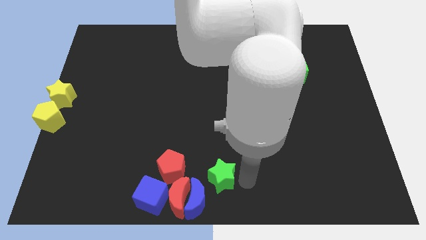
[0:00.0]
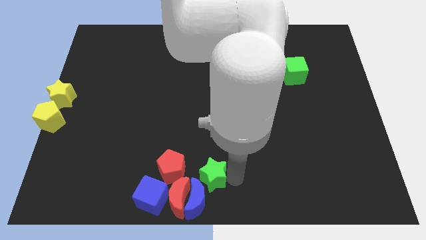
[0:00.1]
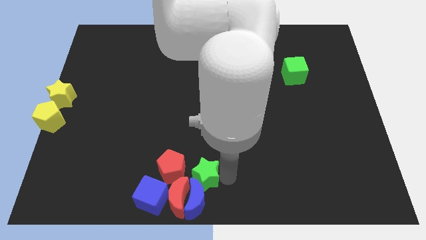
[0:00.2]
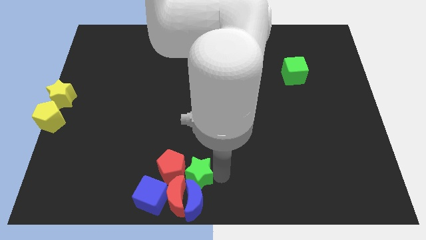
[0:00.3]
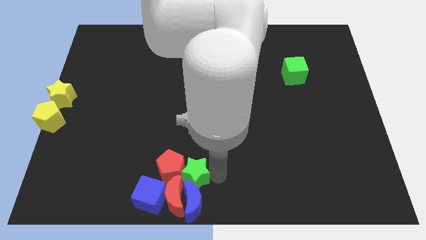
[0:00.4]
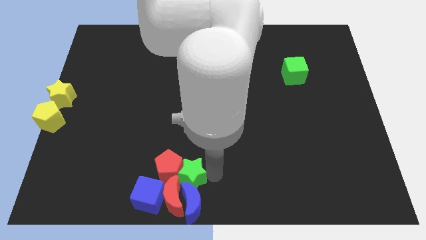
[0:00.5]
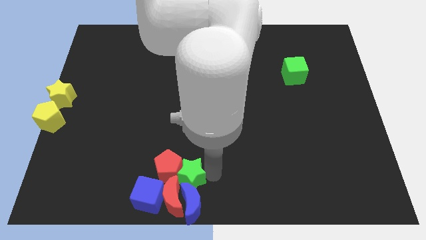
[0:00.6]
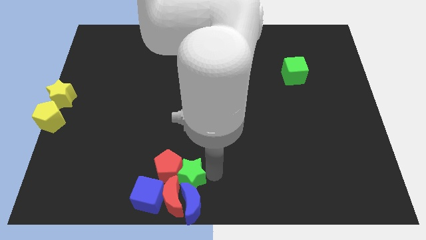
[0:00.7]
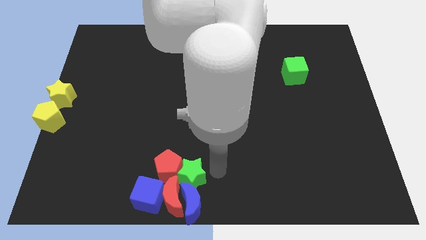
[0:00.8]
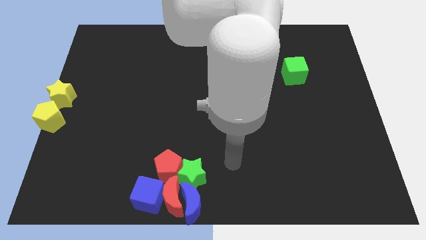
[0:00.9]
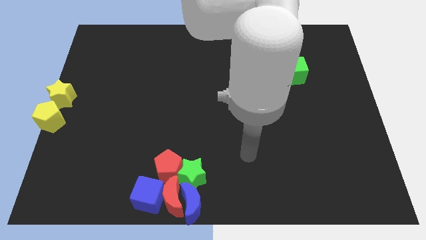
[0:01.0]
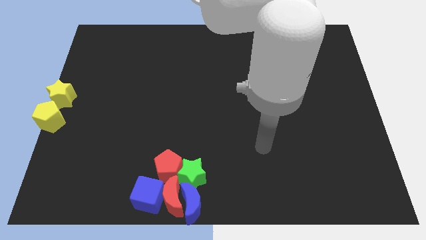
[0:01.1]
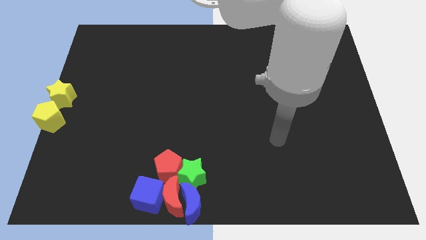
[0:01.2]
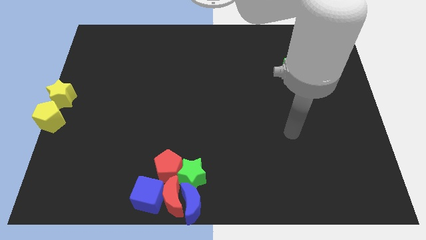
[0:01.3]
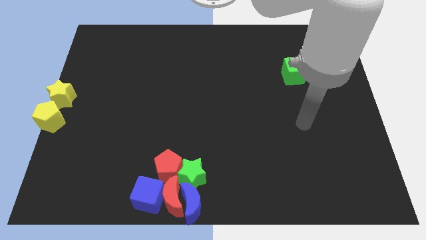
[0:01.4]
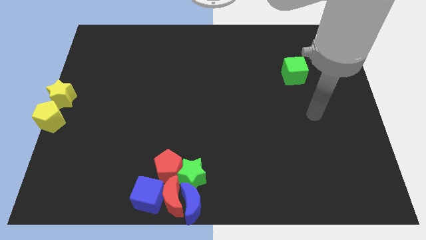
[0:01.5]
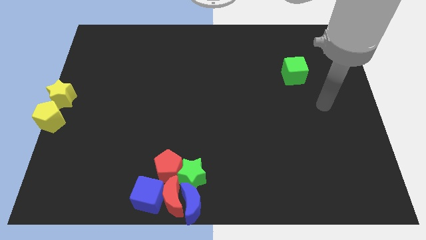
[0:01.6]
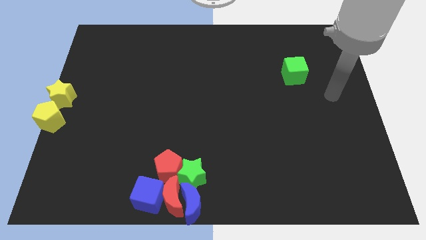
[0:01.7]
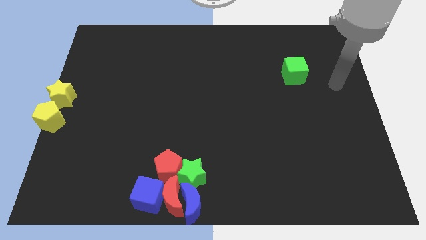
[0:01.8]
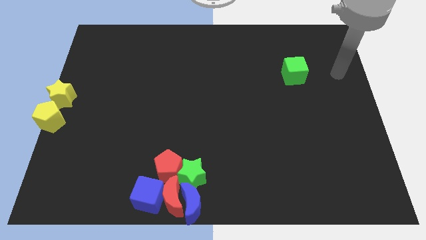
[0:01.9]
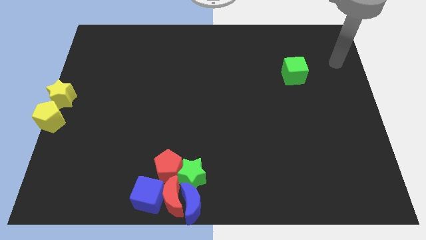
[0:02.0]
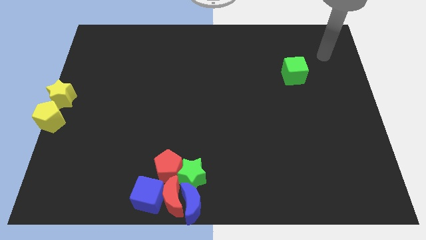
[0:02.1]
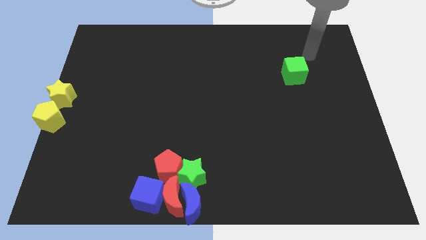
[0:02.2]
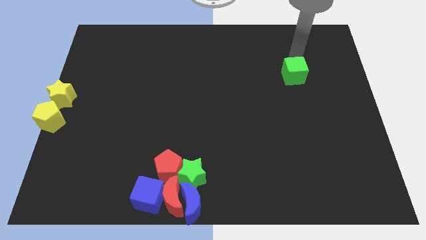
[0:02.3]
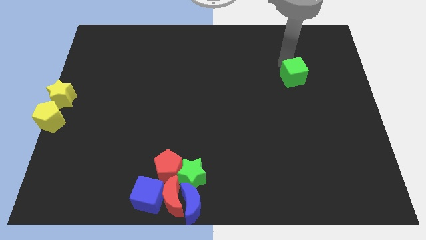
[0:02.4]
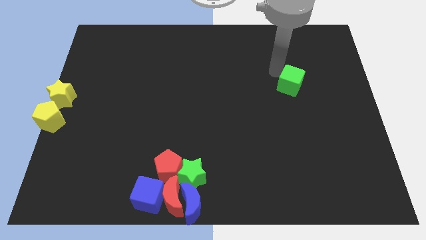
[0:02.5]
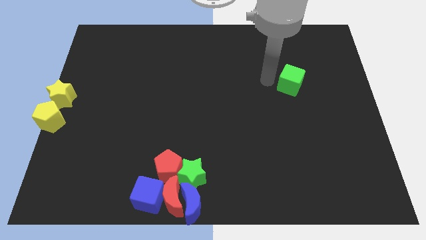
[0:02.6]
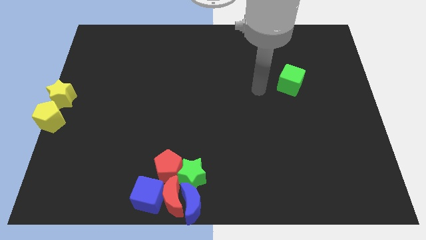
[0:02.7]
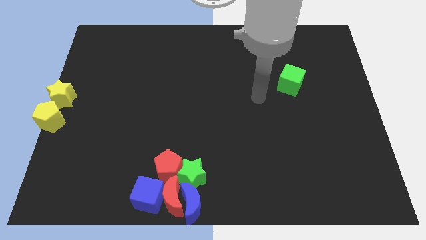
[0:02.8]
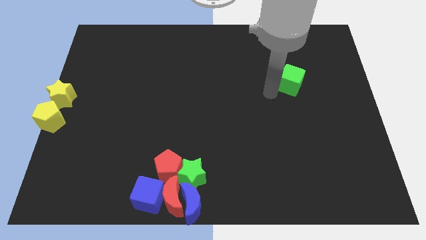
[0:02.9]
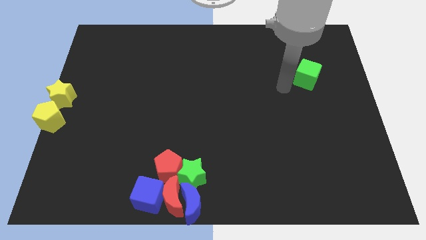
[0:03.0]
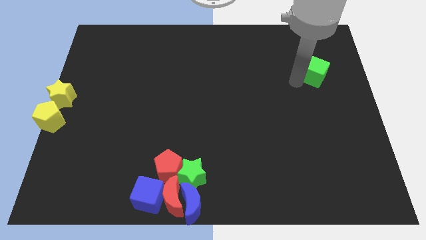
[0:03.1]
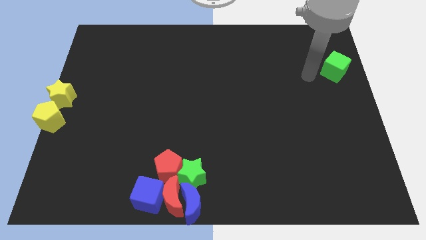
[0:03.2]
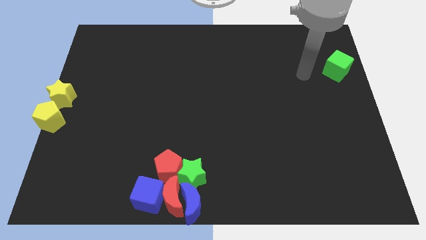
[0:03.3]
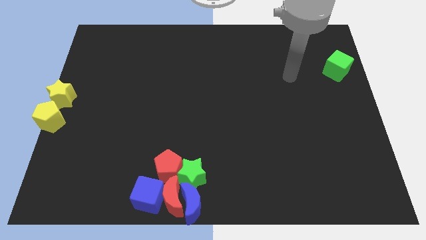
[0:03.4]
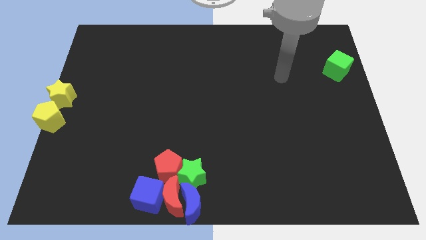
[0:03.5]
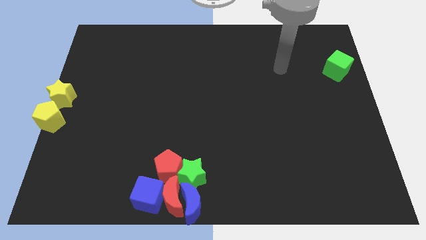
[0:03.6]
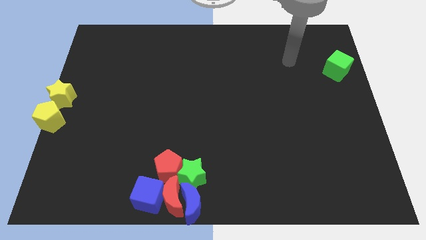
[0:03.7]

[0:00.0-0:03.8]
slide the green cube towards the right side of the board

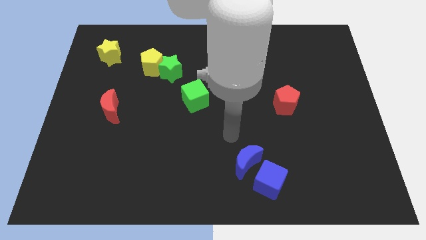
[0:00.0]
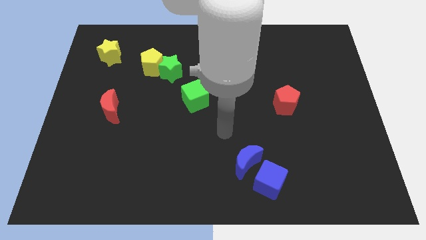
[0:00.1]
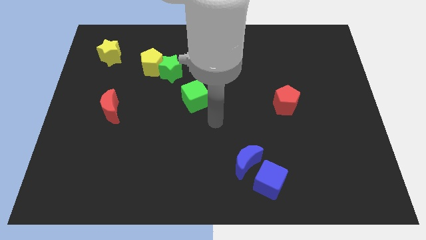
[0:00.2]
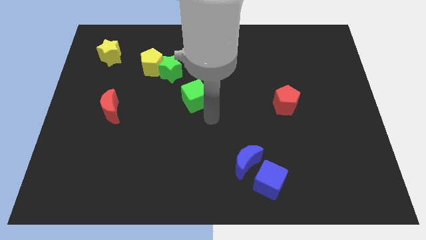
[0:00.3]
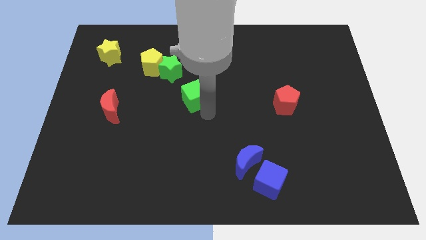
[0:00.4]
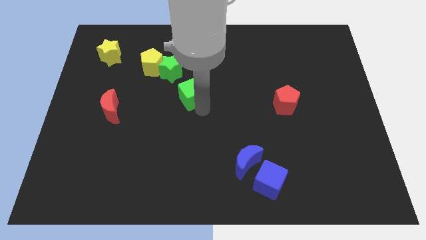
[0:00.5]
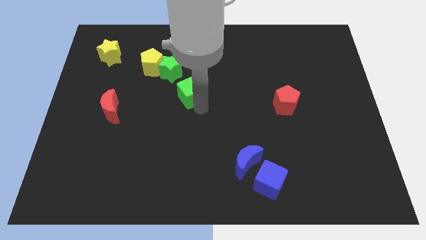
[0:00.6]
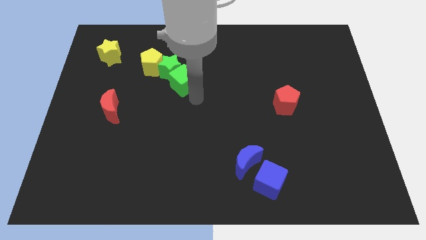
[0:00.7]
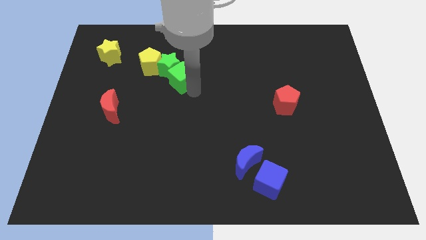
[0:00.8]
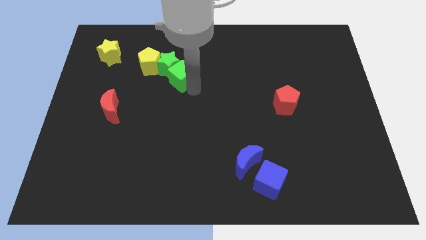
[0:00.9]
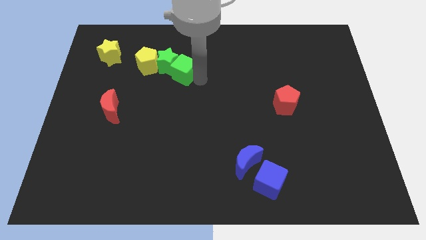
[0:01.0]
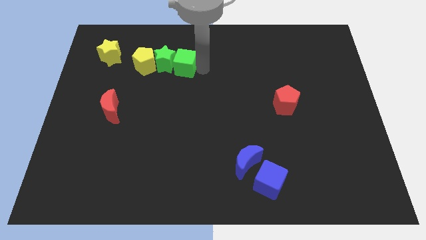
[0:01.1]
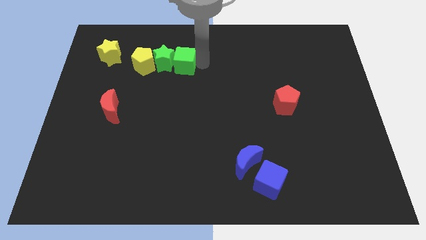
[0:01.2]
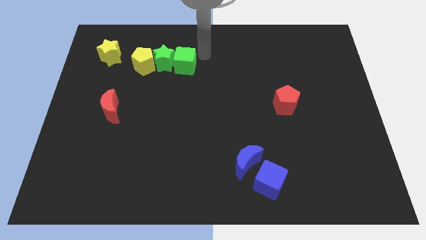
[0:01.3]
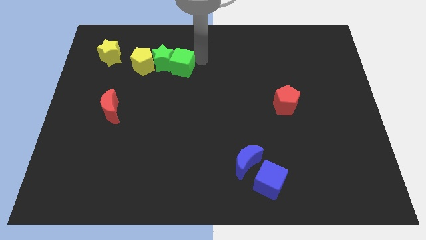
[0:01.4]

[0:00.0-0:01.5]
slide the green cube to the right of the green star

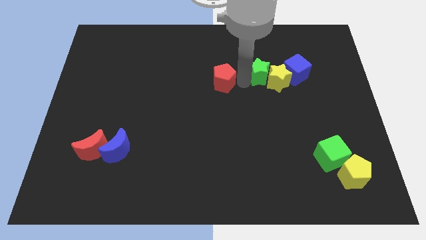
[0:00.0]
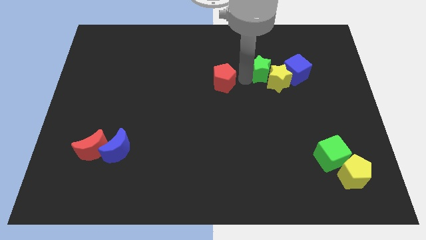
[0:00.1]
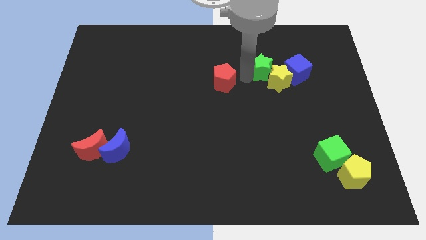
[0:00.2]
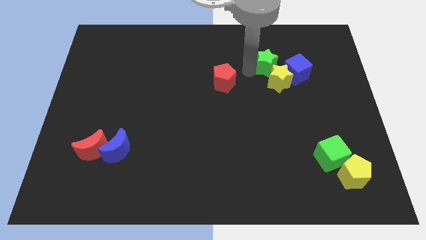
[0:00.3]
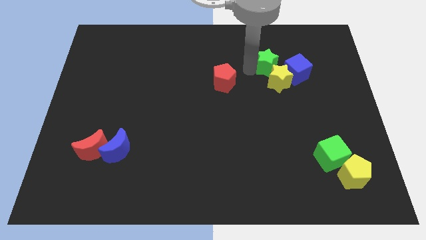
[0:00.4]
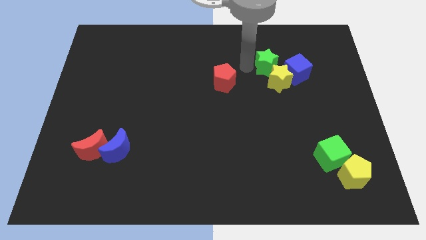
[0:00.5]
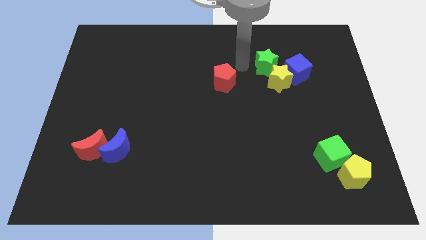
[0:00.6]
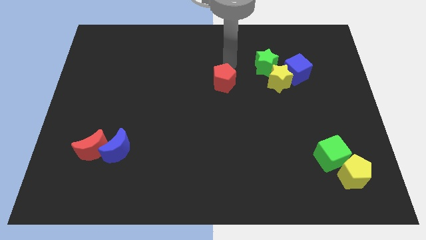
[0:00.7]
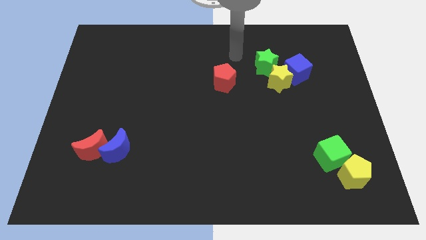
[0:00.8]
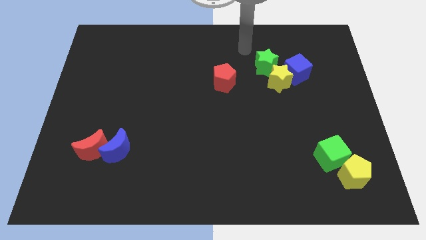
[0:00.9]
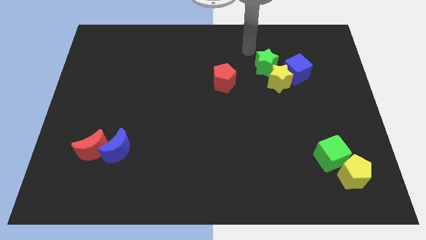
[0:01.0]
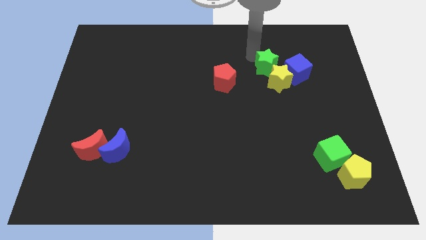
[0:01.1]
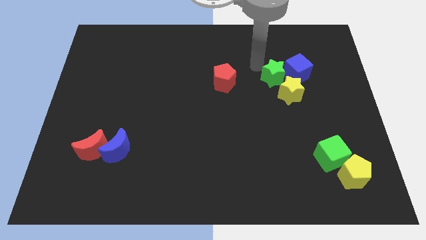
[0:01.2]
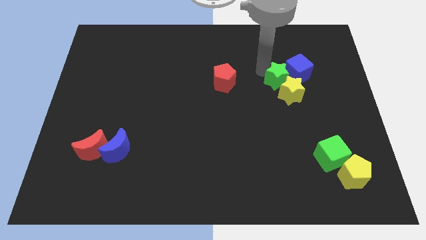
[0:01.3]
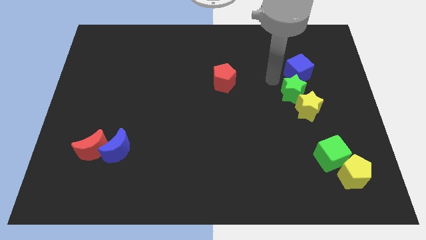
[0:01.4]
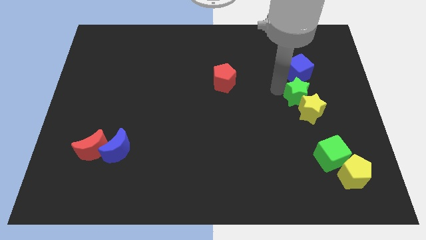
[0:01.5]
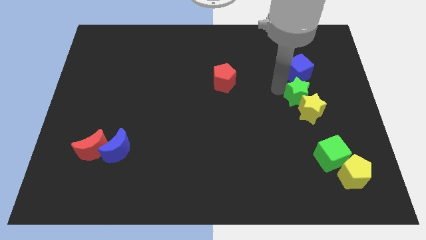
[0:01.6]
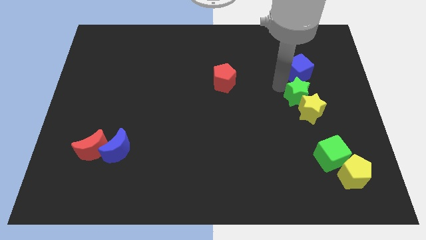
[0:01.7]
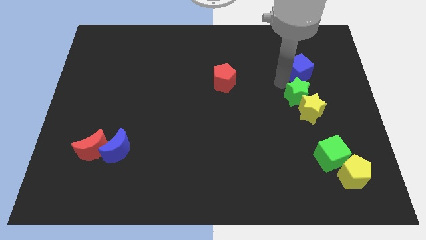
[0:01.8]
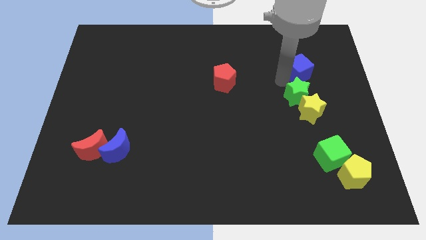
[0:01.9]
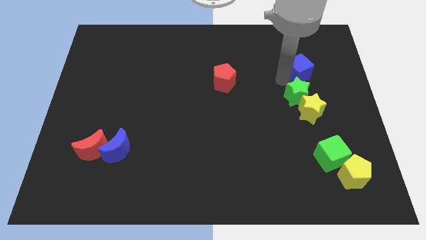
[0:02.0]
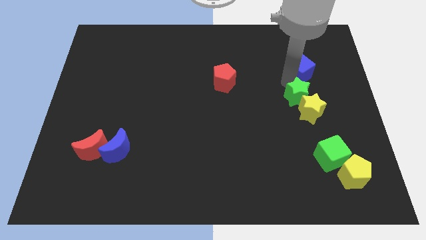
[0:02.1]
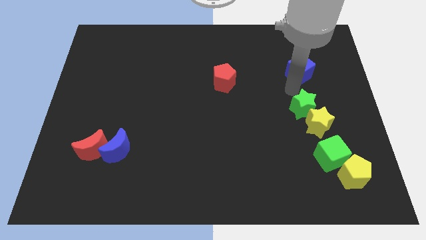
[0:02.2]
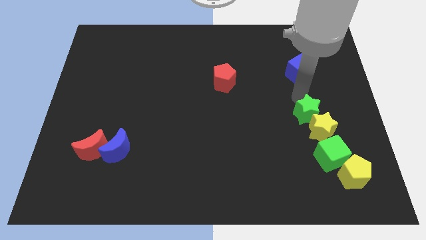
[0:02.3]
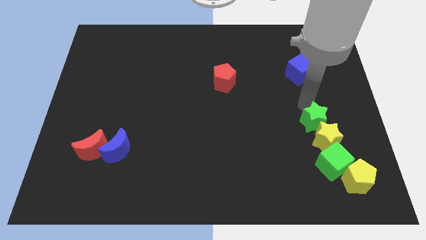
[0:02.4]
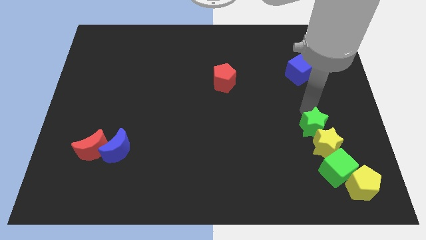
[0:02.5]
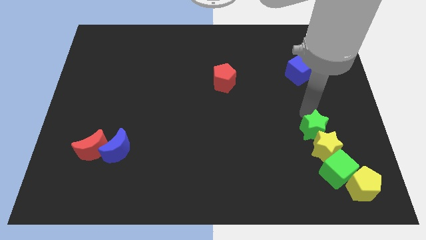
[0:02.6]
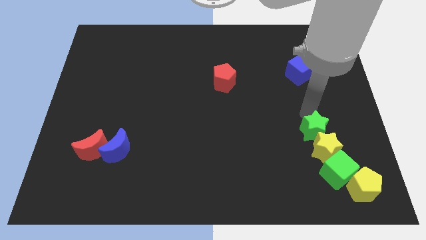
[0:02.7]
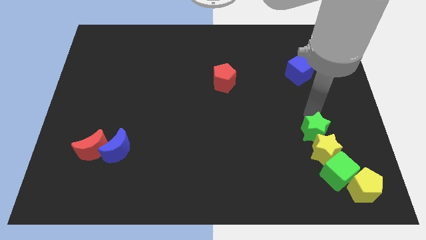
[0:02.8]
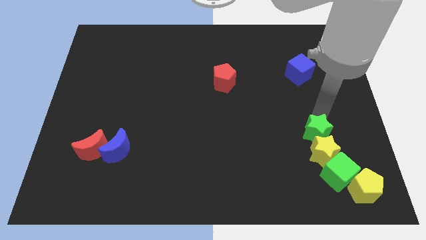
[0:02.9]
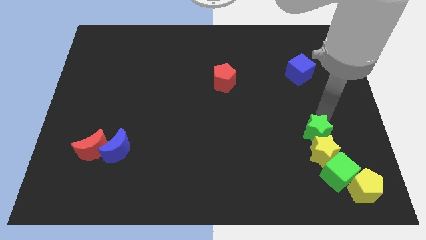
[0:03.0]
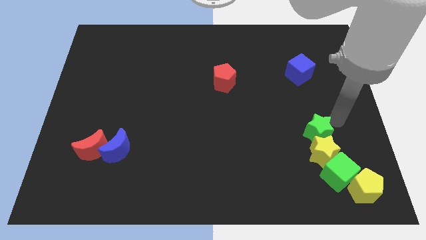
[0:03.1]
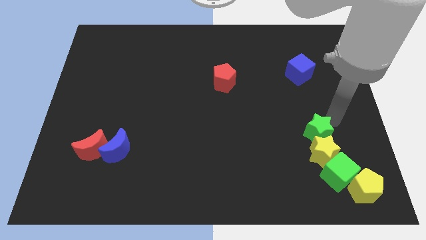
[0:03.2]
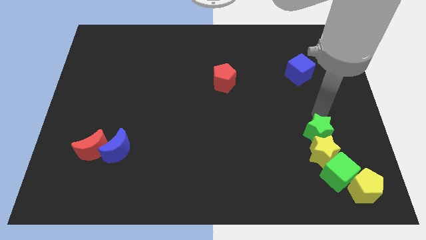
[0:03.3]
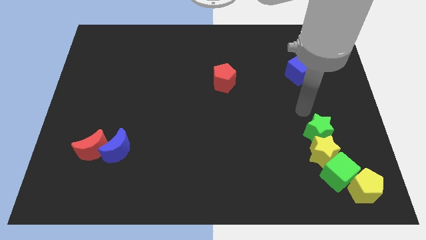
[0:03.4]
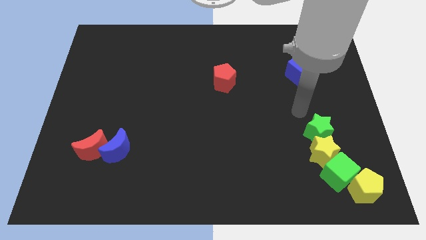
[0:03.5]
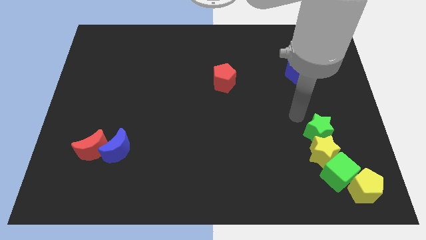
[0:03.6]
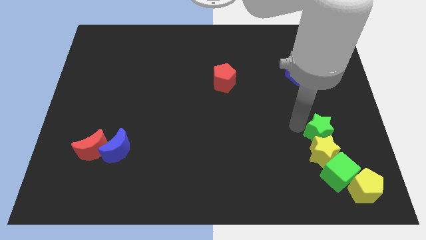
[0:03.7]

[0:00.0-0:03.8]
push the green and yellow blocks to the bottom right
